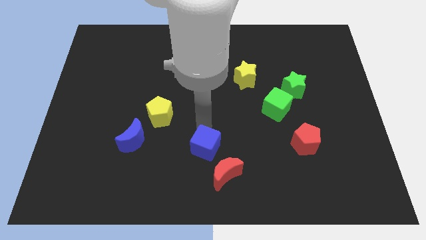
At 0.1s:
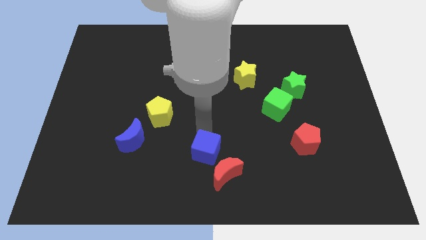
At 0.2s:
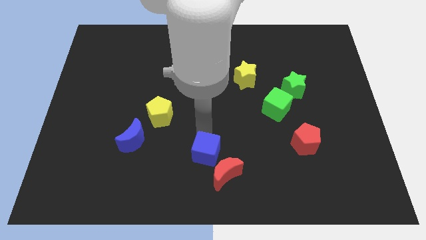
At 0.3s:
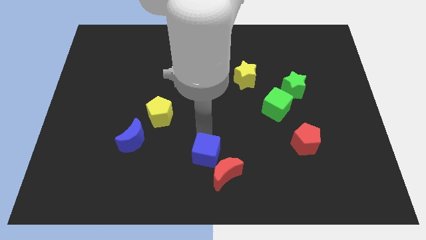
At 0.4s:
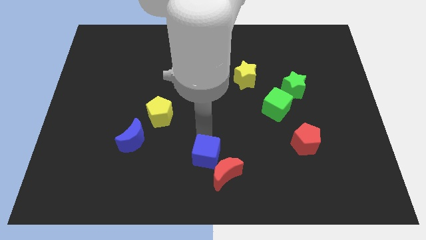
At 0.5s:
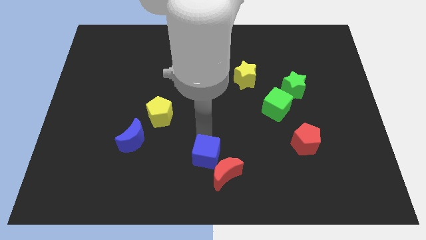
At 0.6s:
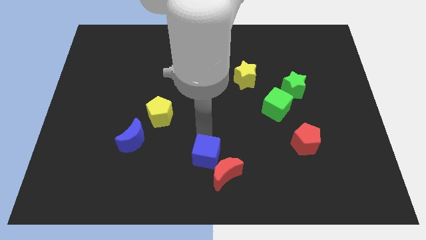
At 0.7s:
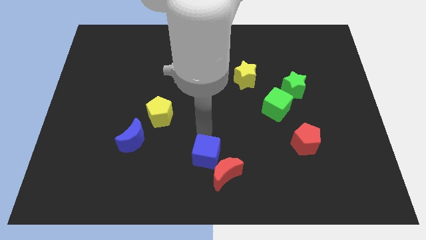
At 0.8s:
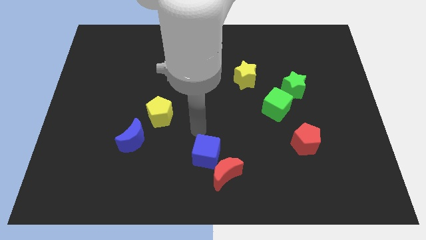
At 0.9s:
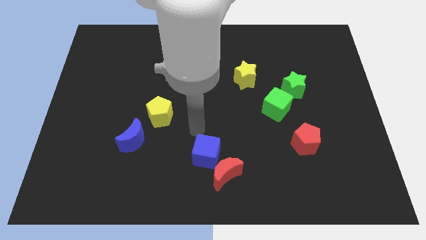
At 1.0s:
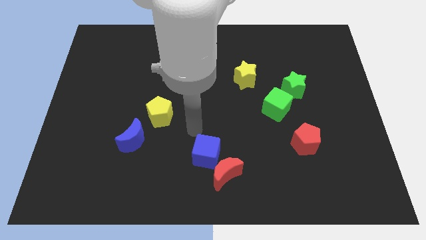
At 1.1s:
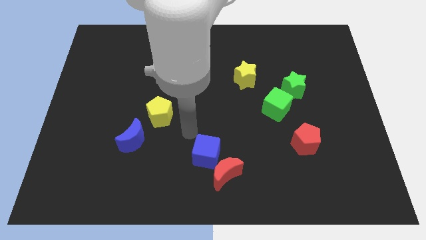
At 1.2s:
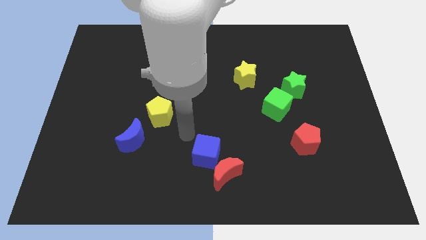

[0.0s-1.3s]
put blue cube on the top of red crescent

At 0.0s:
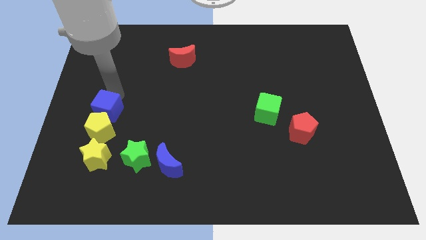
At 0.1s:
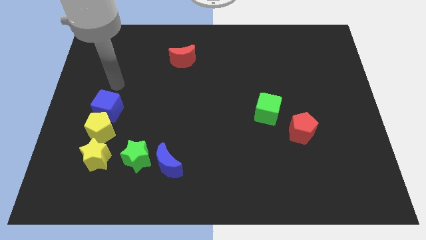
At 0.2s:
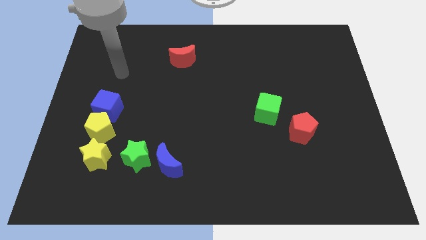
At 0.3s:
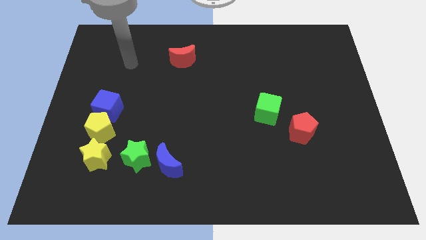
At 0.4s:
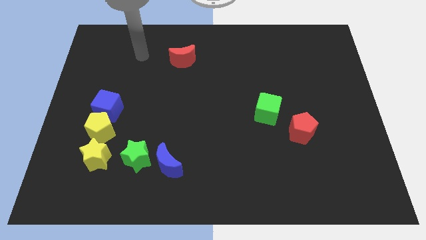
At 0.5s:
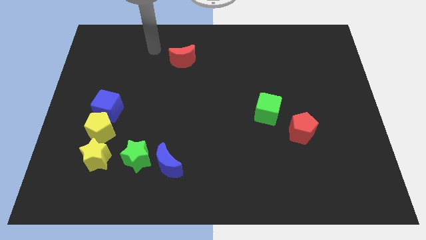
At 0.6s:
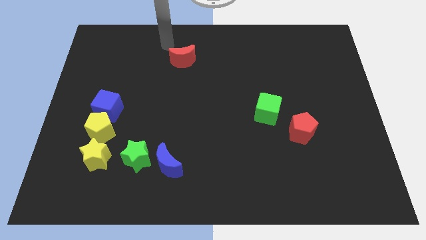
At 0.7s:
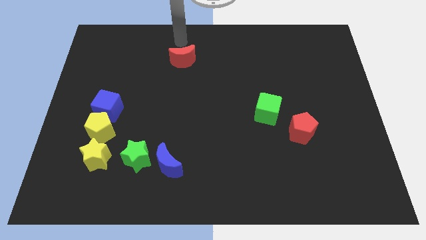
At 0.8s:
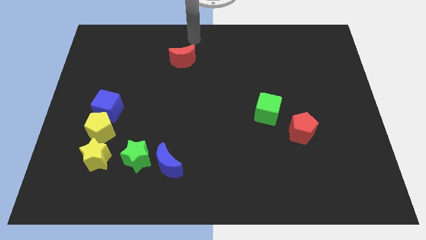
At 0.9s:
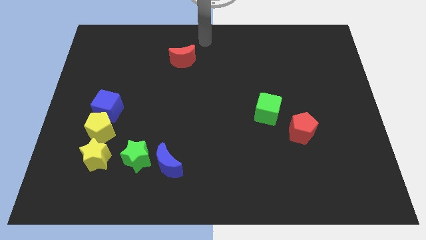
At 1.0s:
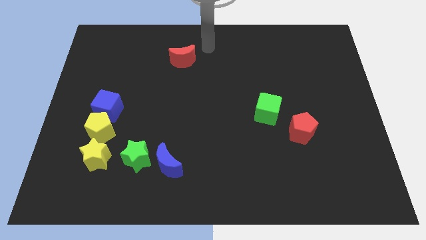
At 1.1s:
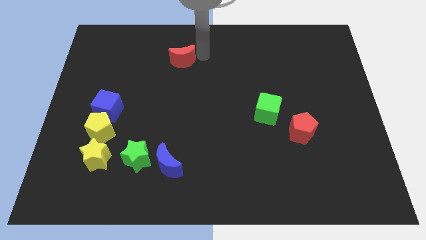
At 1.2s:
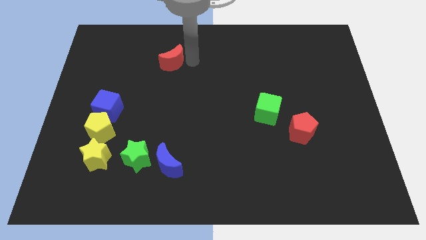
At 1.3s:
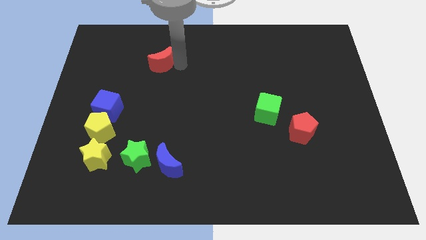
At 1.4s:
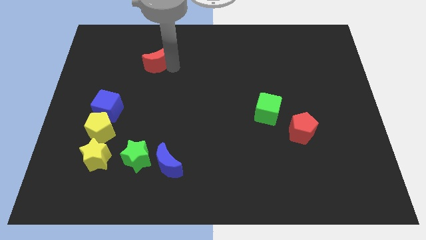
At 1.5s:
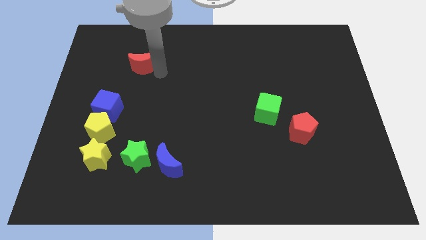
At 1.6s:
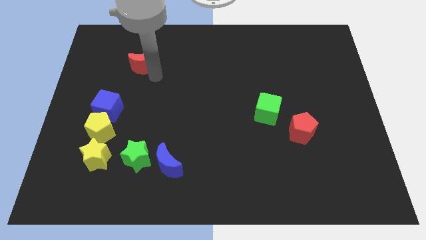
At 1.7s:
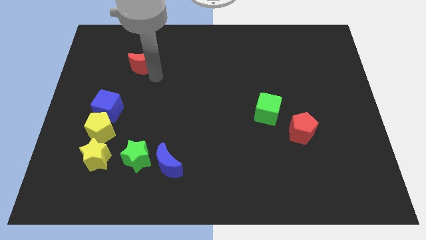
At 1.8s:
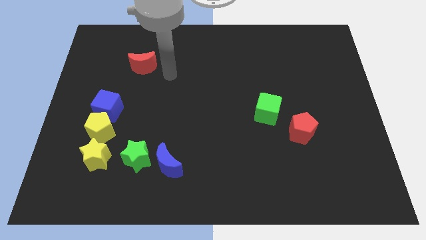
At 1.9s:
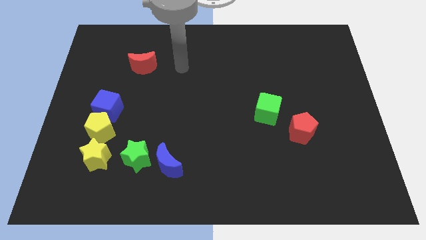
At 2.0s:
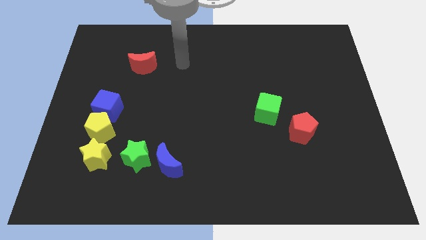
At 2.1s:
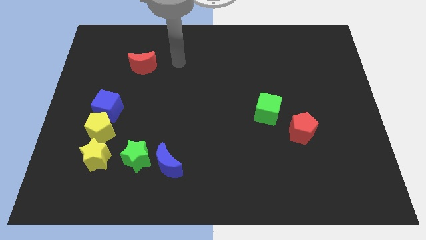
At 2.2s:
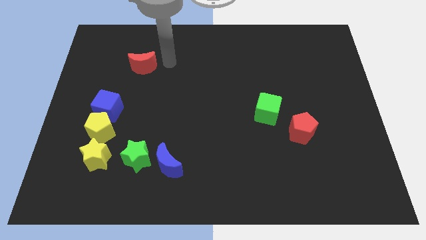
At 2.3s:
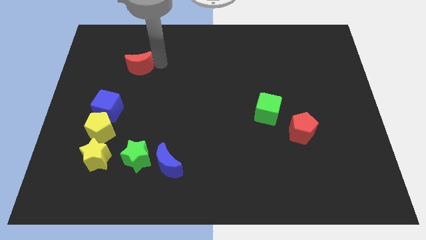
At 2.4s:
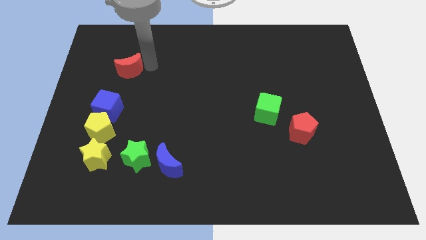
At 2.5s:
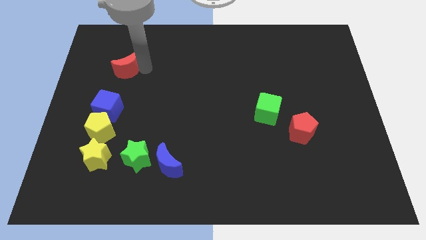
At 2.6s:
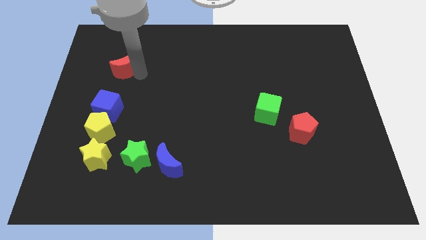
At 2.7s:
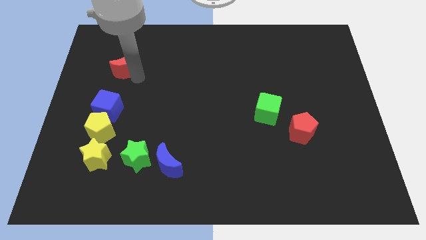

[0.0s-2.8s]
place the red moon towards left center

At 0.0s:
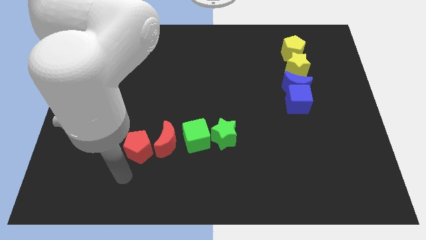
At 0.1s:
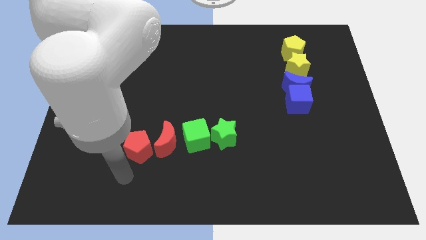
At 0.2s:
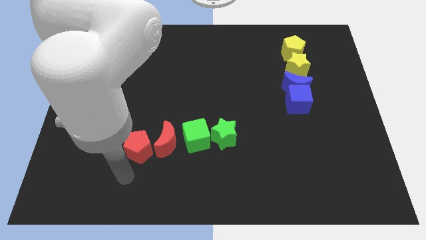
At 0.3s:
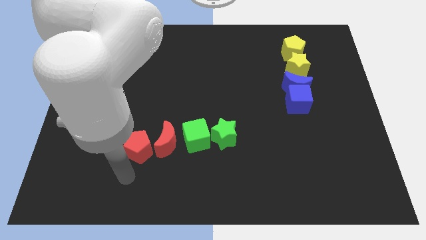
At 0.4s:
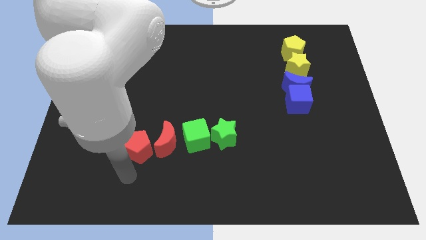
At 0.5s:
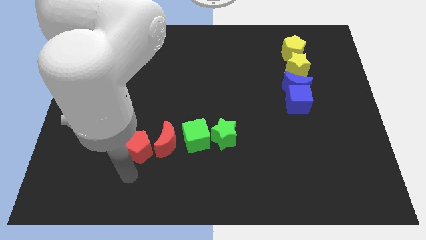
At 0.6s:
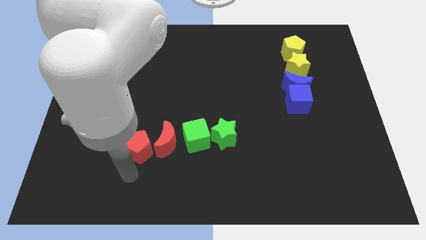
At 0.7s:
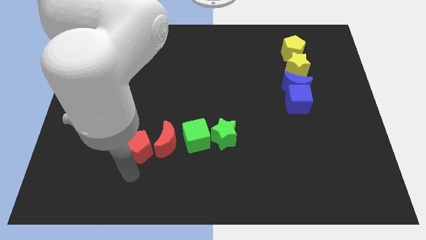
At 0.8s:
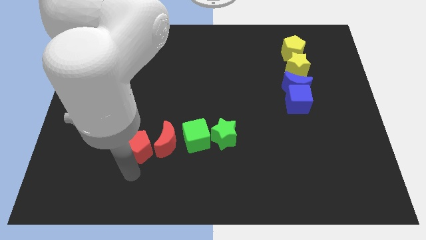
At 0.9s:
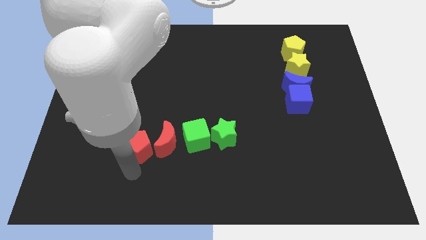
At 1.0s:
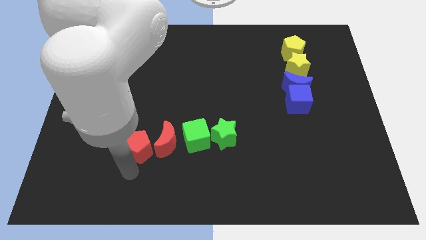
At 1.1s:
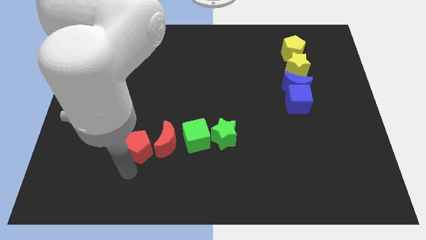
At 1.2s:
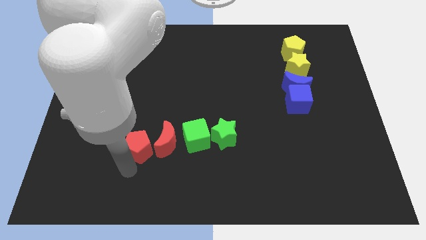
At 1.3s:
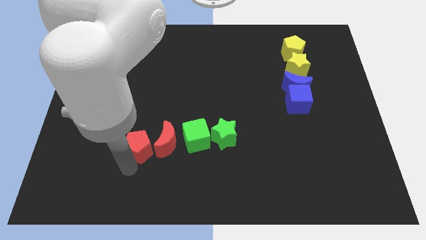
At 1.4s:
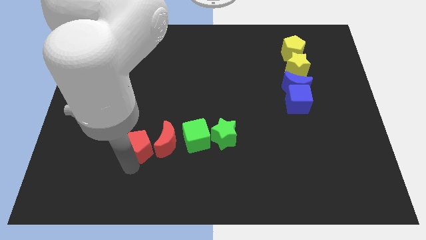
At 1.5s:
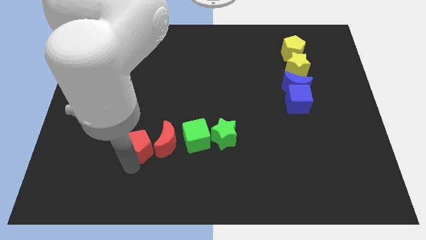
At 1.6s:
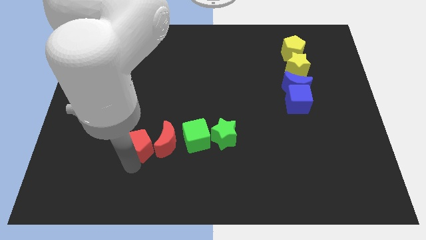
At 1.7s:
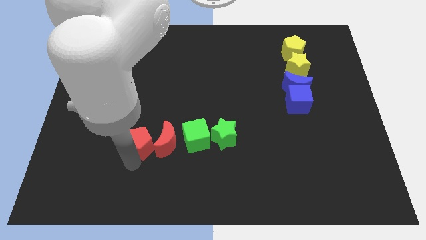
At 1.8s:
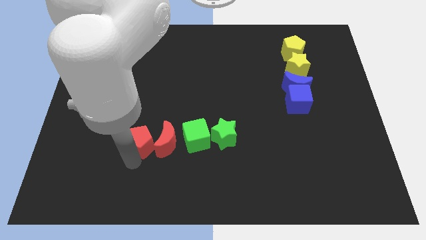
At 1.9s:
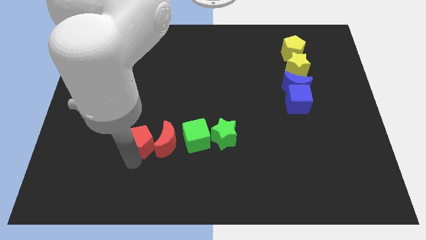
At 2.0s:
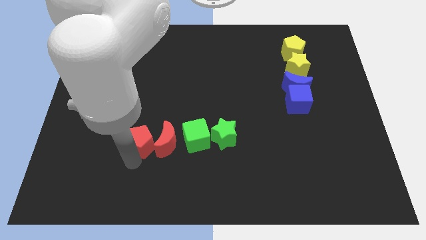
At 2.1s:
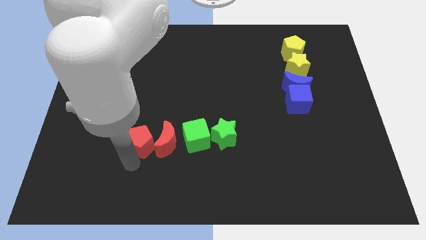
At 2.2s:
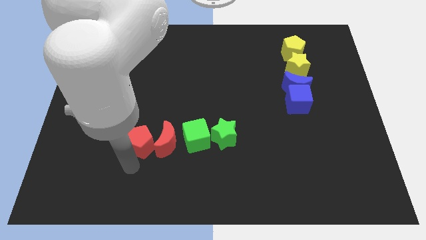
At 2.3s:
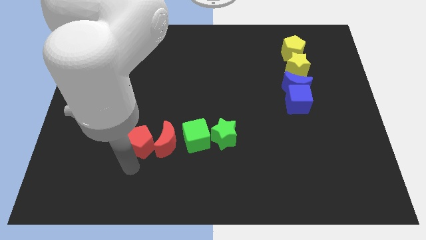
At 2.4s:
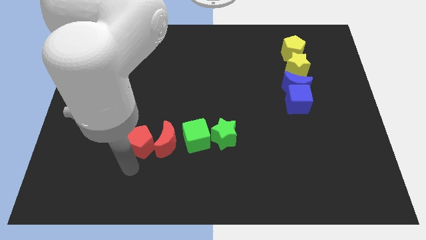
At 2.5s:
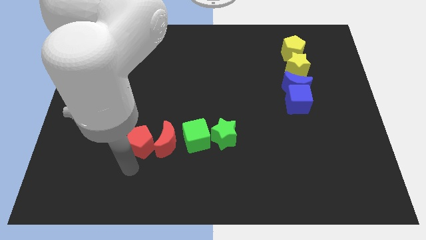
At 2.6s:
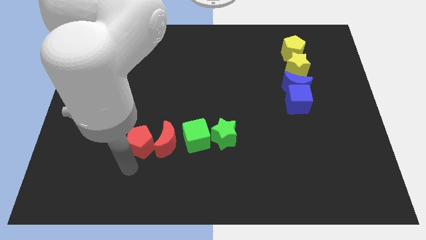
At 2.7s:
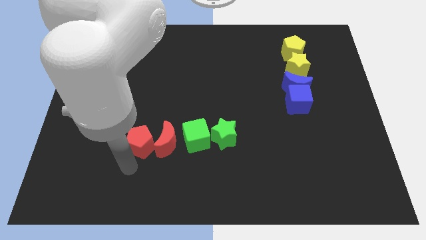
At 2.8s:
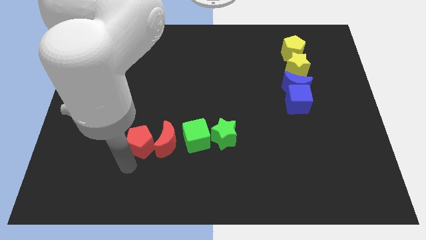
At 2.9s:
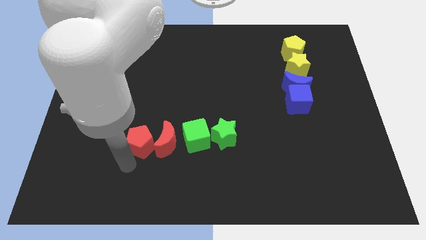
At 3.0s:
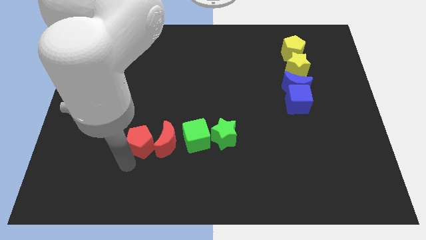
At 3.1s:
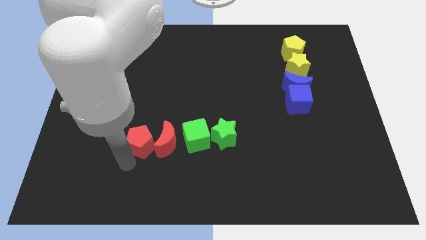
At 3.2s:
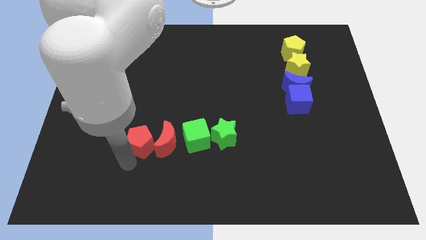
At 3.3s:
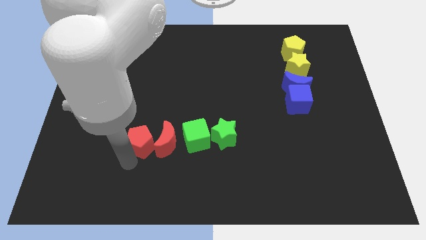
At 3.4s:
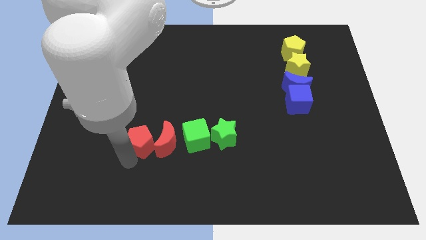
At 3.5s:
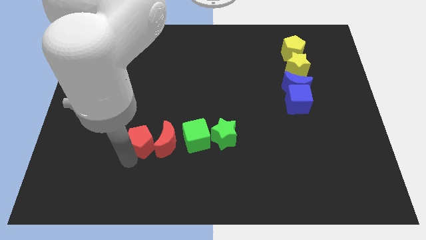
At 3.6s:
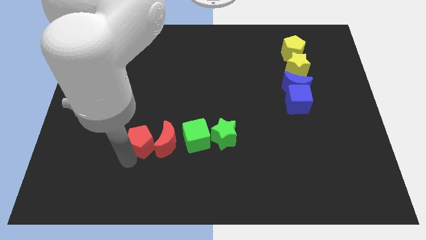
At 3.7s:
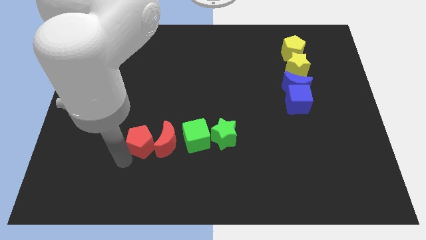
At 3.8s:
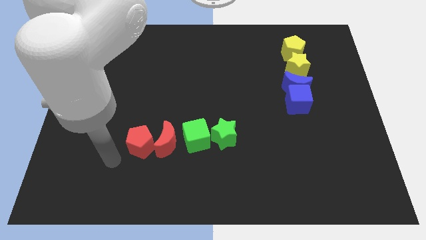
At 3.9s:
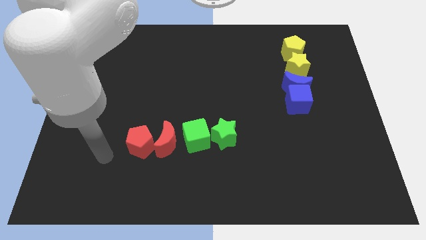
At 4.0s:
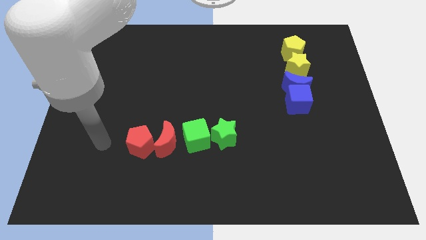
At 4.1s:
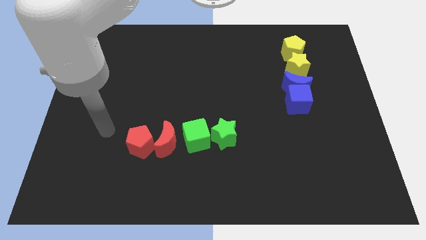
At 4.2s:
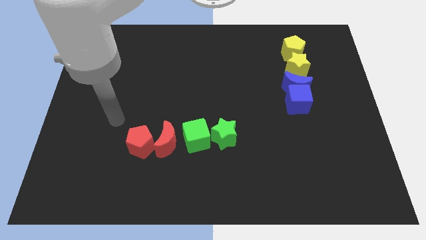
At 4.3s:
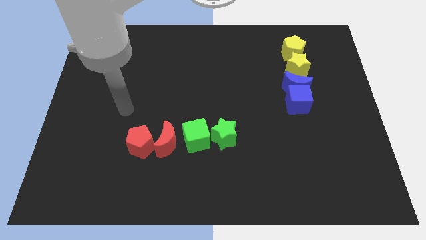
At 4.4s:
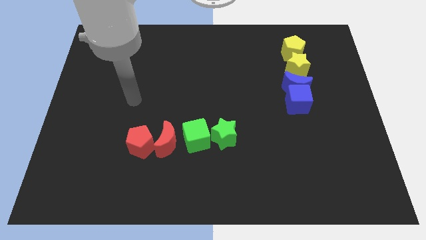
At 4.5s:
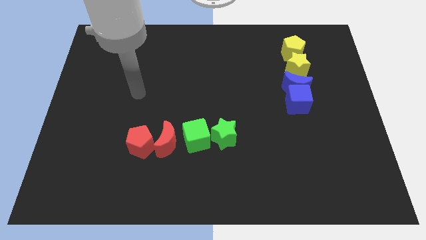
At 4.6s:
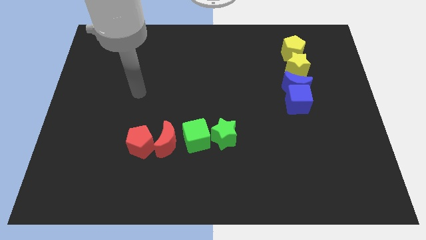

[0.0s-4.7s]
slightly move the red pentagon to the left of the red crescent

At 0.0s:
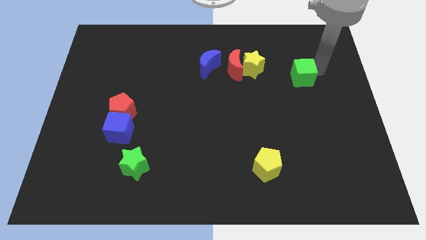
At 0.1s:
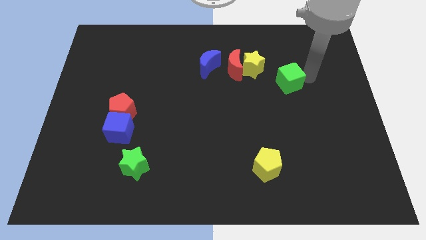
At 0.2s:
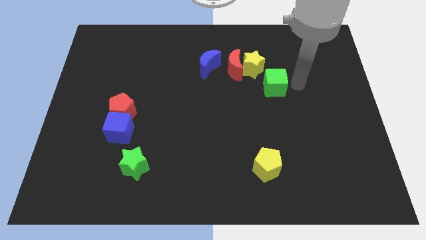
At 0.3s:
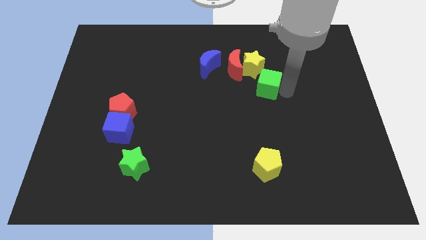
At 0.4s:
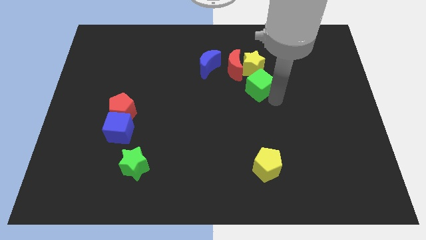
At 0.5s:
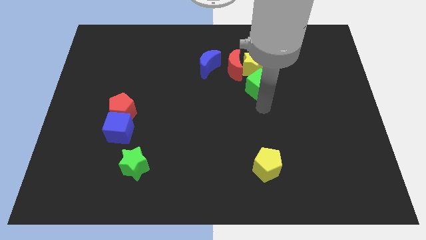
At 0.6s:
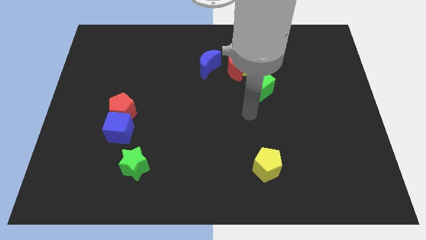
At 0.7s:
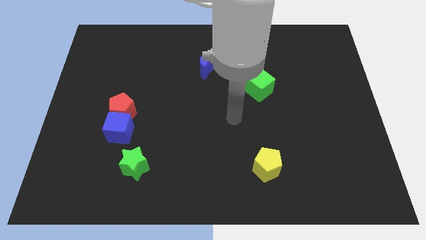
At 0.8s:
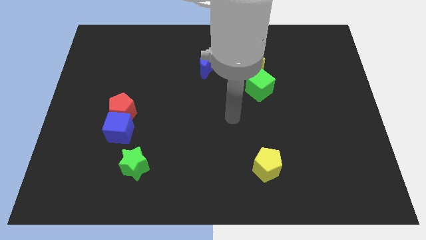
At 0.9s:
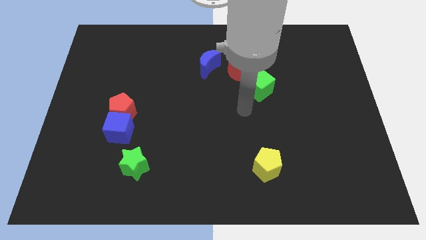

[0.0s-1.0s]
put the green cube at the top side of the yellow pentagon
